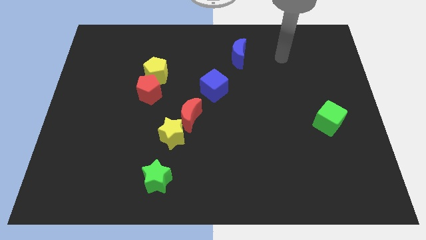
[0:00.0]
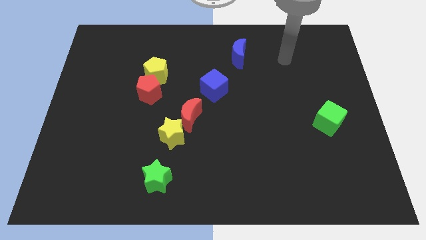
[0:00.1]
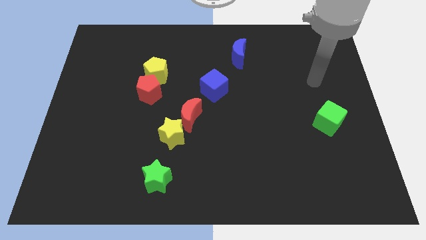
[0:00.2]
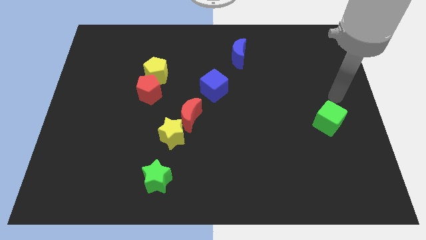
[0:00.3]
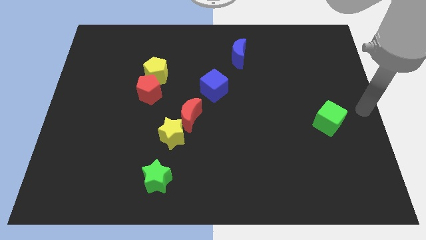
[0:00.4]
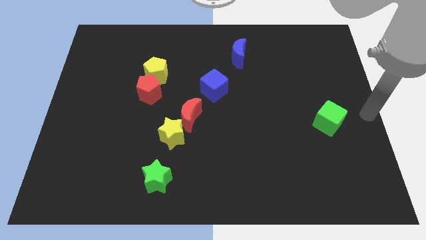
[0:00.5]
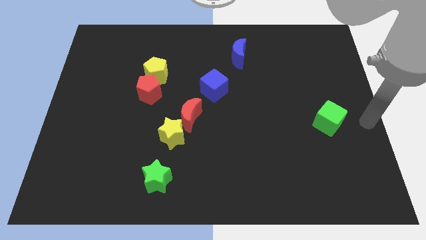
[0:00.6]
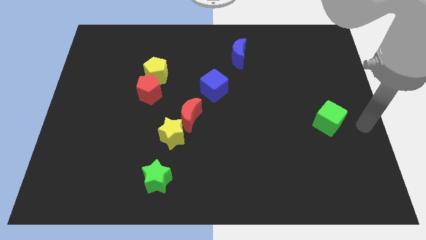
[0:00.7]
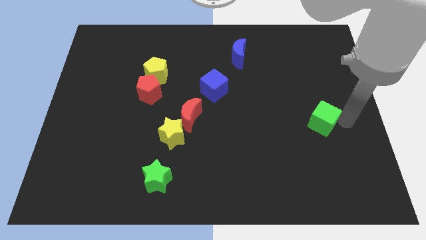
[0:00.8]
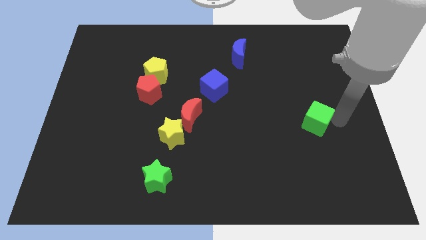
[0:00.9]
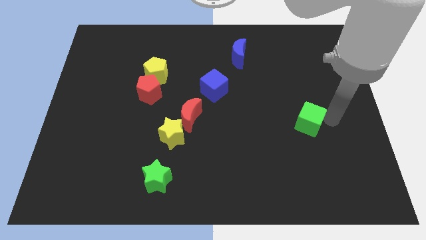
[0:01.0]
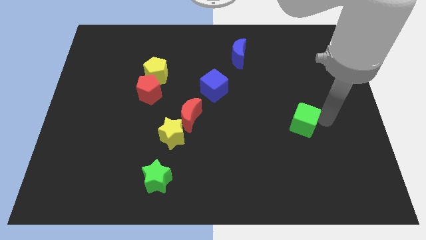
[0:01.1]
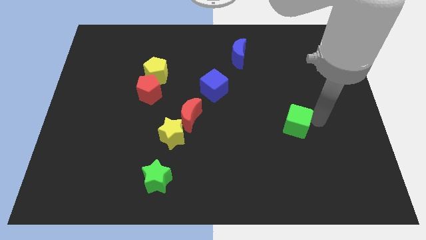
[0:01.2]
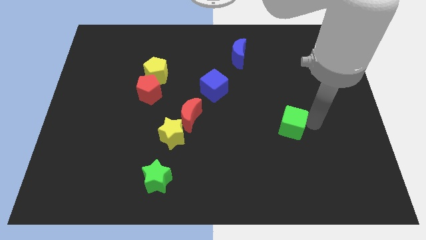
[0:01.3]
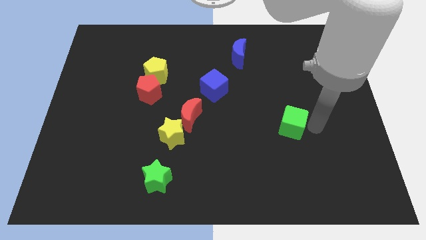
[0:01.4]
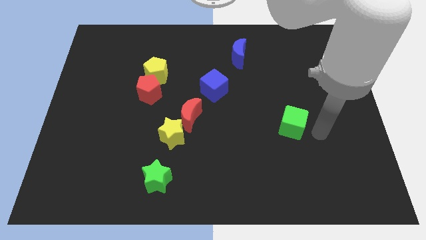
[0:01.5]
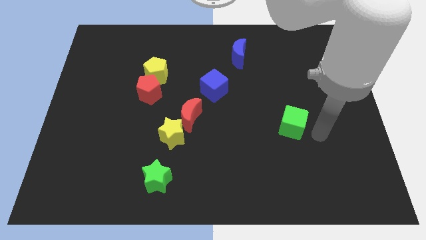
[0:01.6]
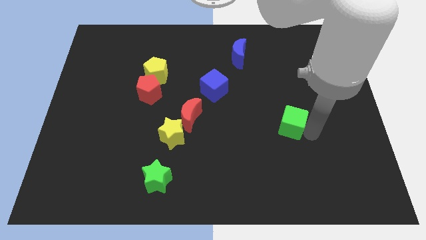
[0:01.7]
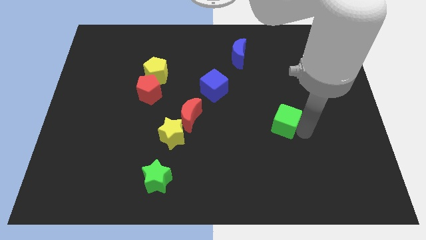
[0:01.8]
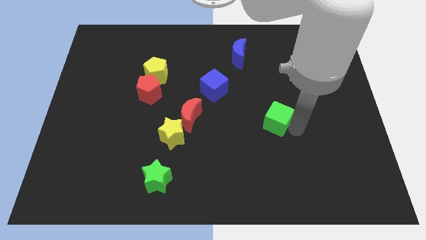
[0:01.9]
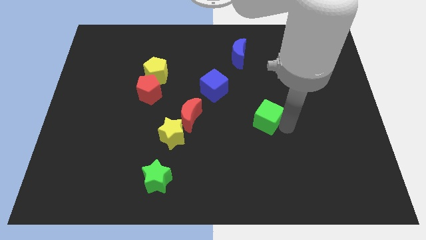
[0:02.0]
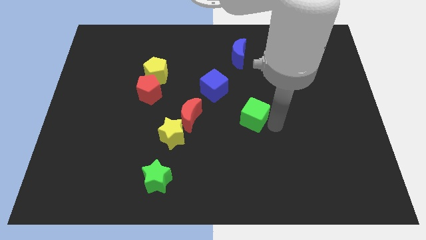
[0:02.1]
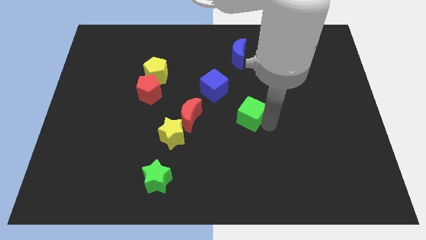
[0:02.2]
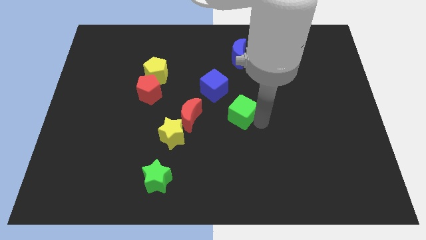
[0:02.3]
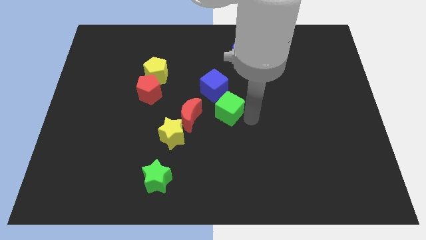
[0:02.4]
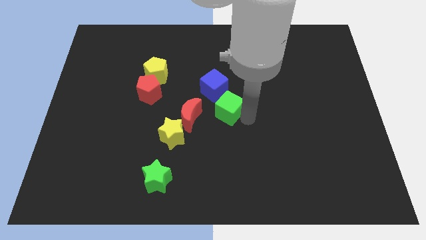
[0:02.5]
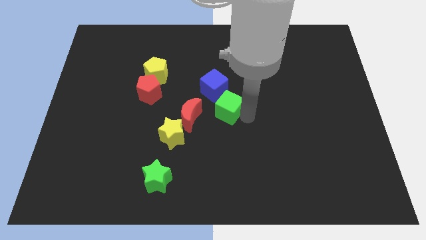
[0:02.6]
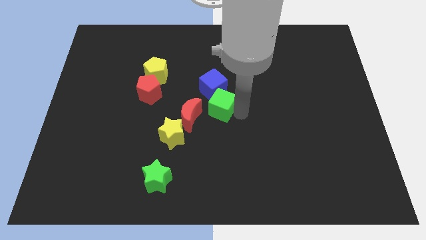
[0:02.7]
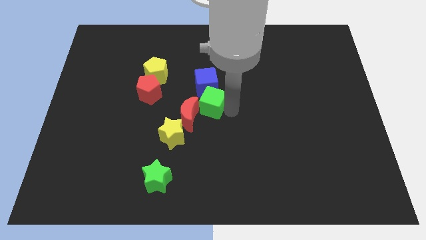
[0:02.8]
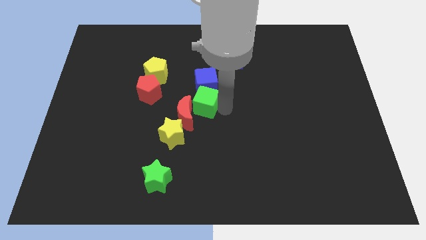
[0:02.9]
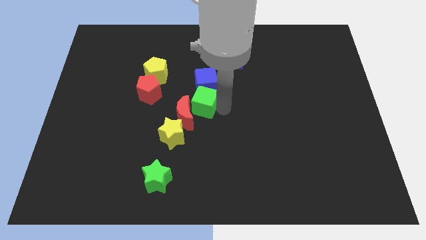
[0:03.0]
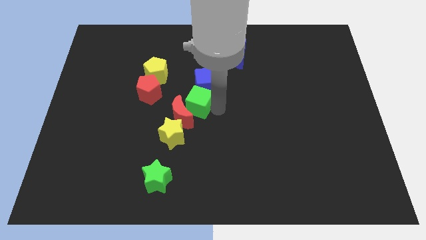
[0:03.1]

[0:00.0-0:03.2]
put the green cube to the red moon

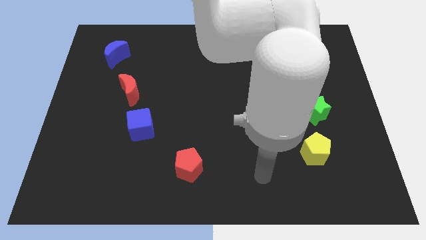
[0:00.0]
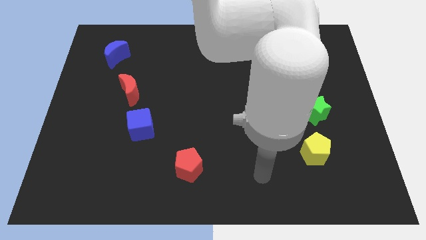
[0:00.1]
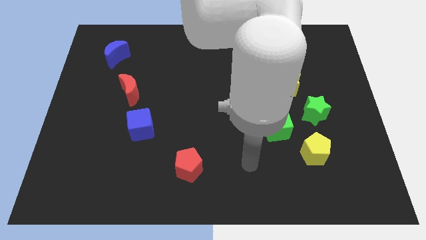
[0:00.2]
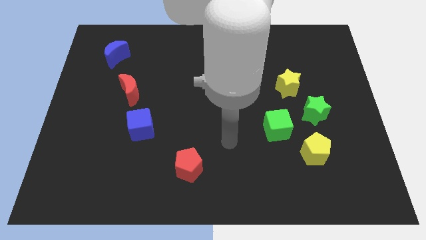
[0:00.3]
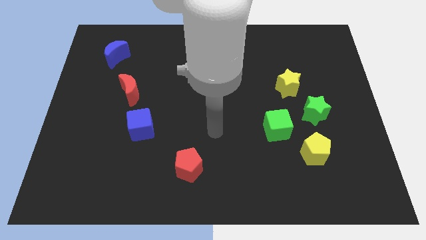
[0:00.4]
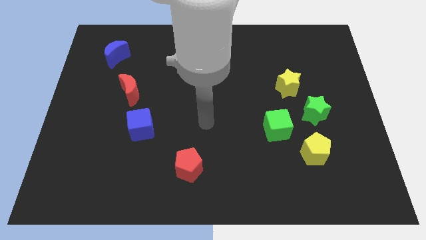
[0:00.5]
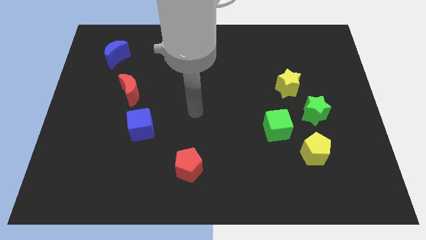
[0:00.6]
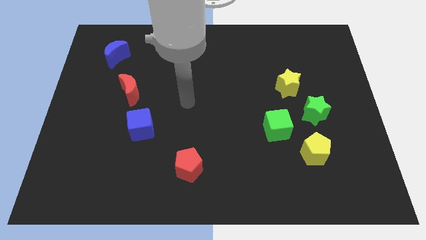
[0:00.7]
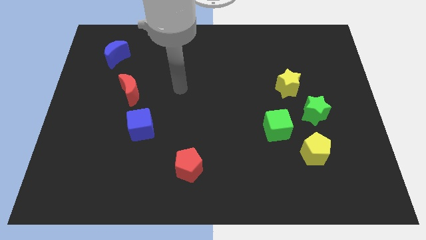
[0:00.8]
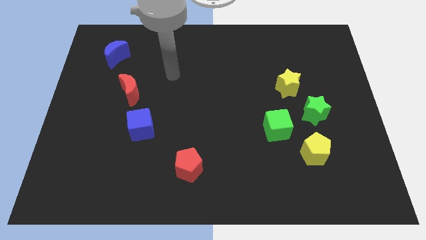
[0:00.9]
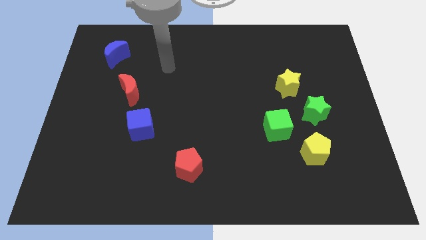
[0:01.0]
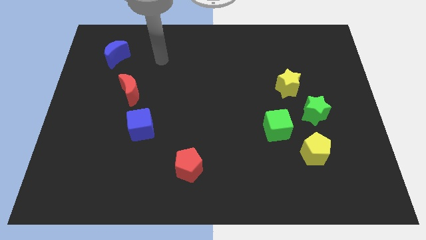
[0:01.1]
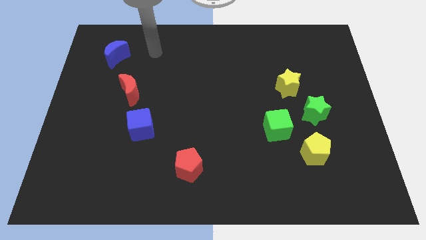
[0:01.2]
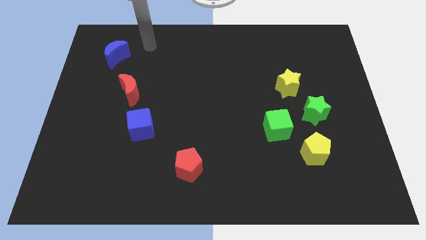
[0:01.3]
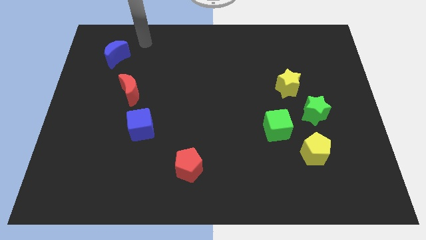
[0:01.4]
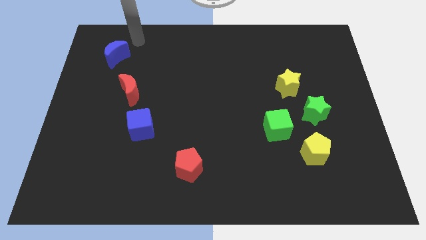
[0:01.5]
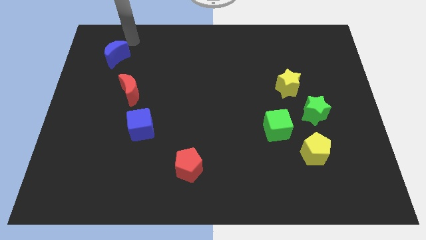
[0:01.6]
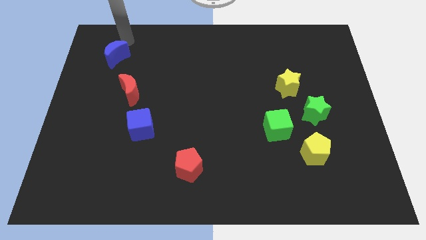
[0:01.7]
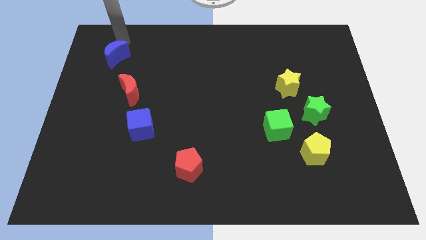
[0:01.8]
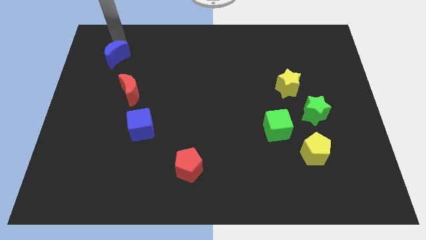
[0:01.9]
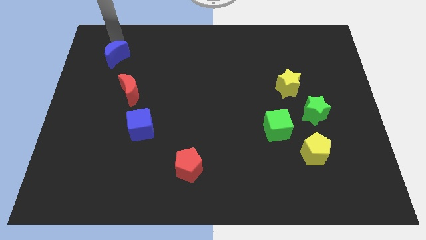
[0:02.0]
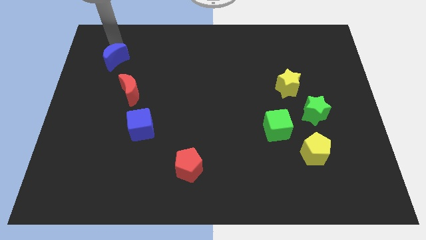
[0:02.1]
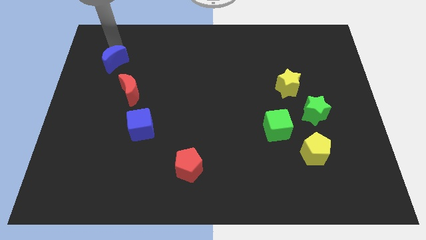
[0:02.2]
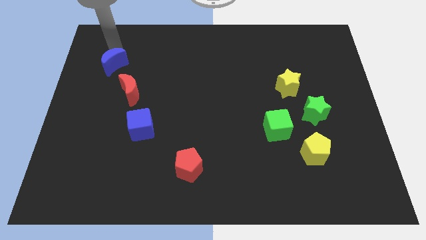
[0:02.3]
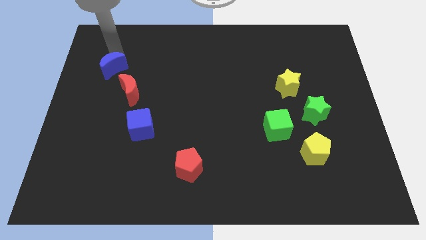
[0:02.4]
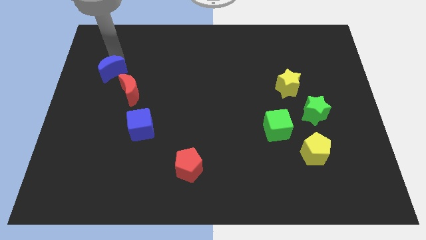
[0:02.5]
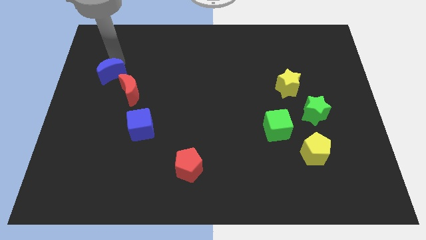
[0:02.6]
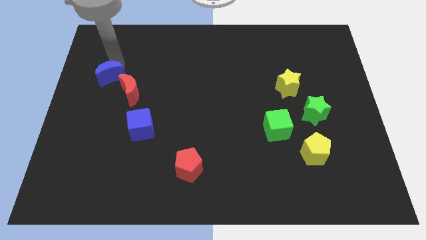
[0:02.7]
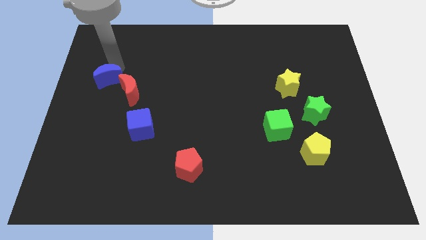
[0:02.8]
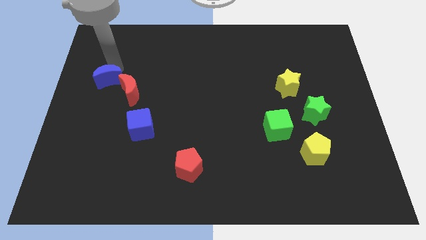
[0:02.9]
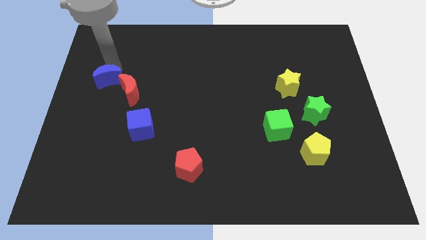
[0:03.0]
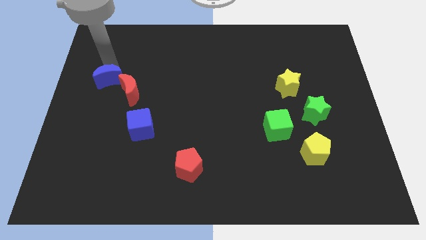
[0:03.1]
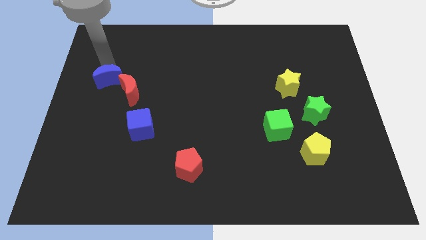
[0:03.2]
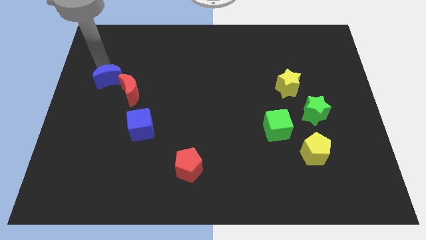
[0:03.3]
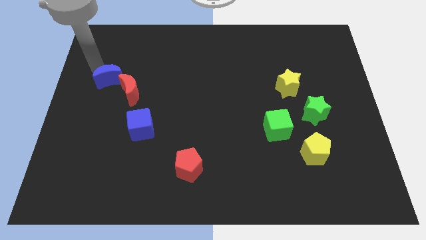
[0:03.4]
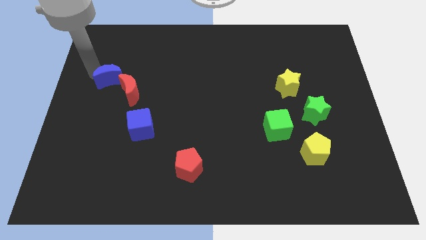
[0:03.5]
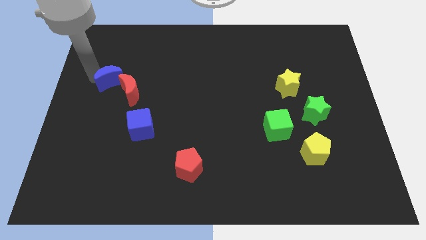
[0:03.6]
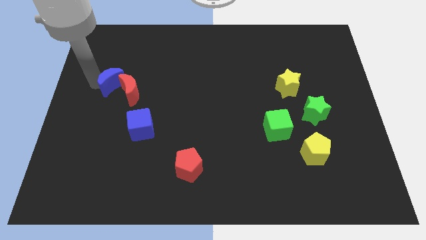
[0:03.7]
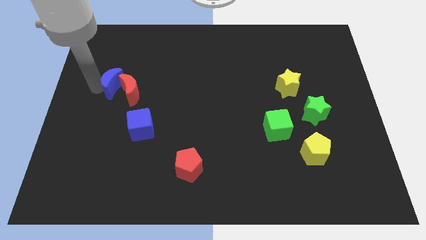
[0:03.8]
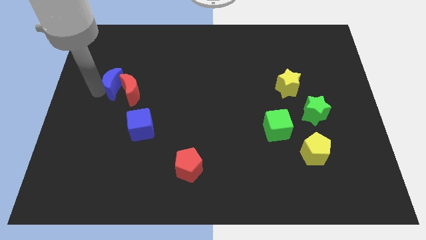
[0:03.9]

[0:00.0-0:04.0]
put the blue moon towards the red moon

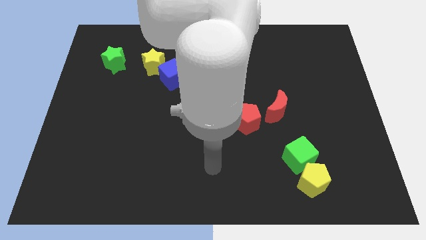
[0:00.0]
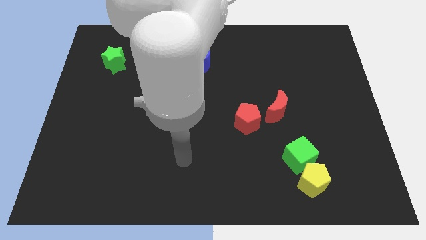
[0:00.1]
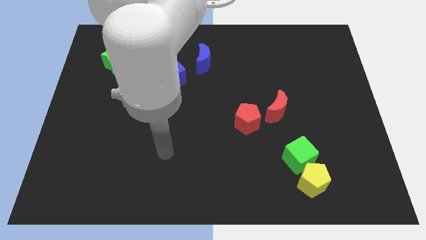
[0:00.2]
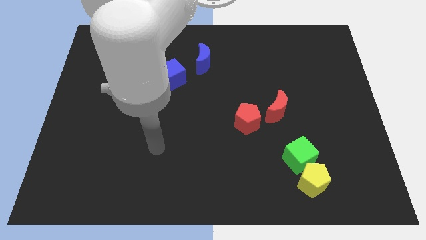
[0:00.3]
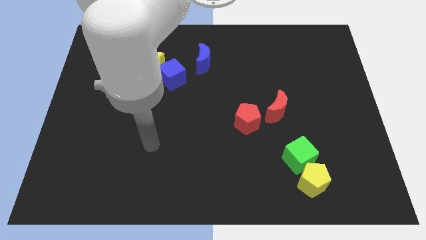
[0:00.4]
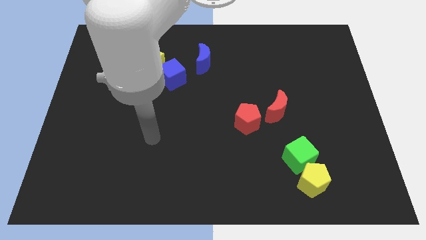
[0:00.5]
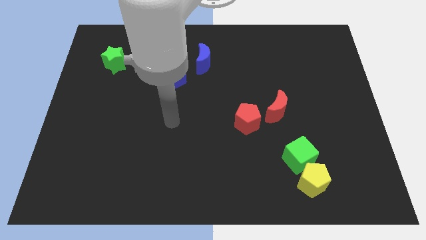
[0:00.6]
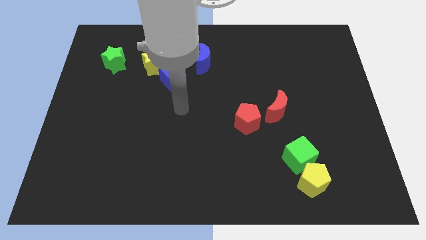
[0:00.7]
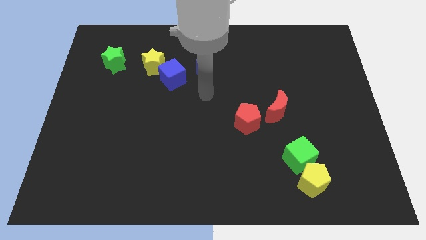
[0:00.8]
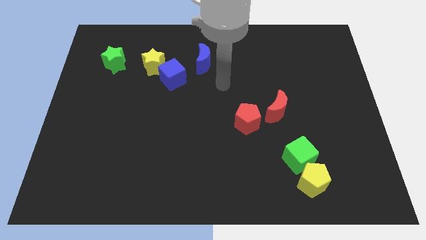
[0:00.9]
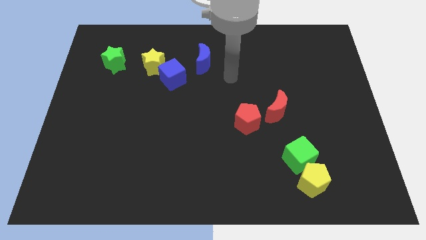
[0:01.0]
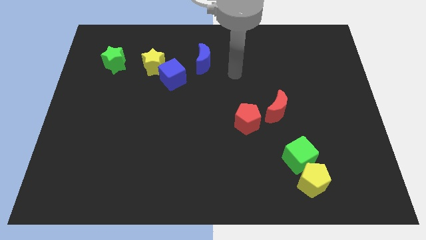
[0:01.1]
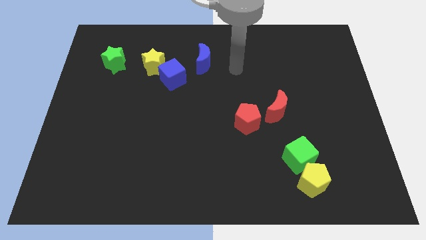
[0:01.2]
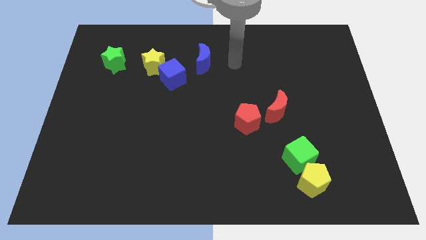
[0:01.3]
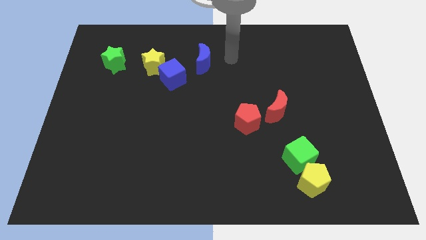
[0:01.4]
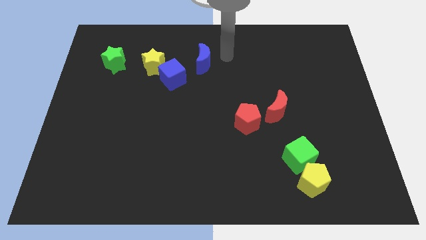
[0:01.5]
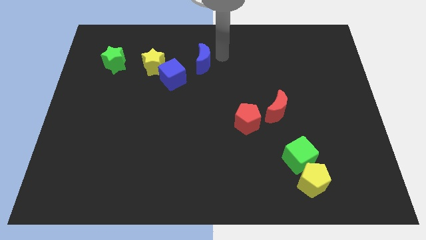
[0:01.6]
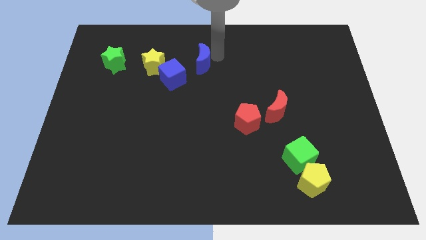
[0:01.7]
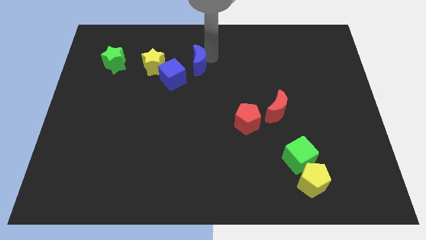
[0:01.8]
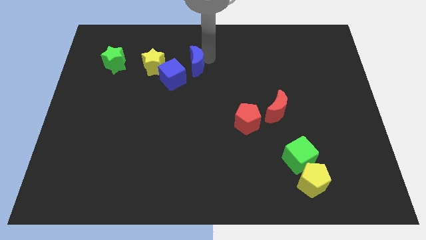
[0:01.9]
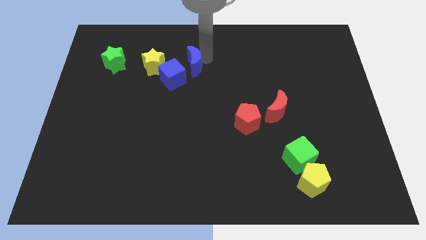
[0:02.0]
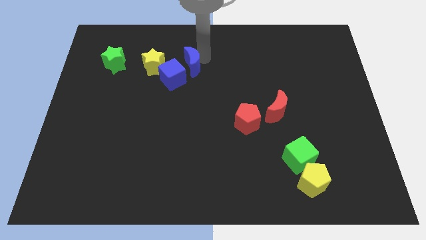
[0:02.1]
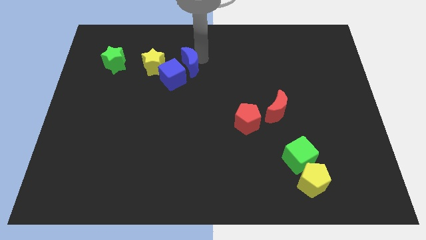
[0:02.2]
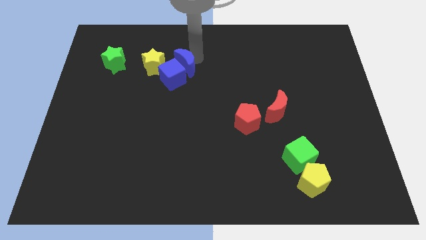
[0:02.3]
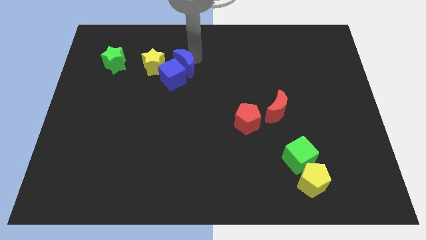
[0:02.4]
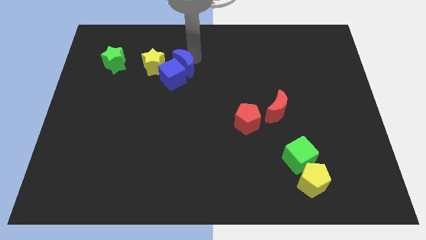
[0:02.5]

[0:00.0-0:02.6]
slide the blue moon towards the blue cube
